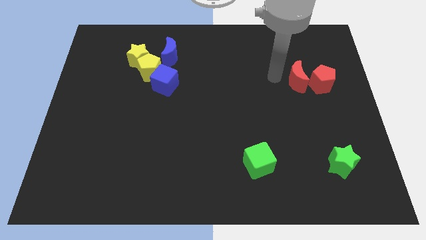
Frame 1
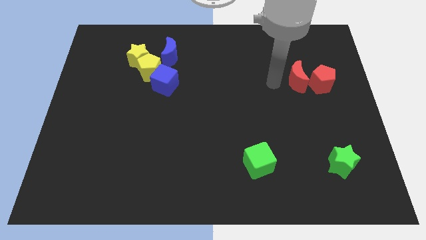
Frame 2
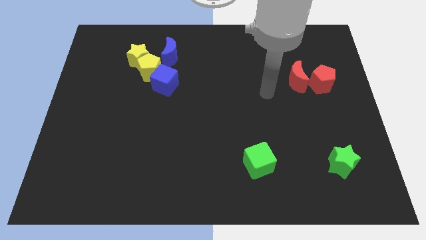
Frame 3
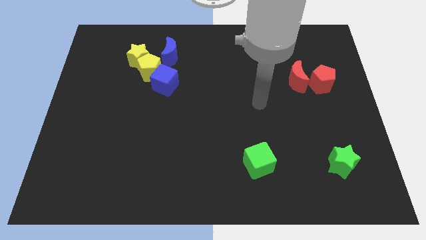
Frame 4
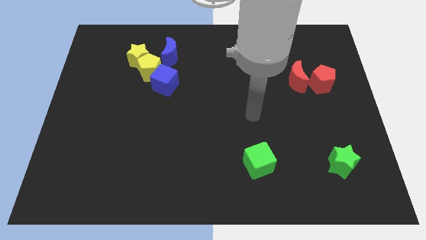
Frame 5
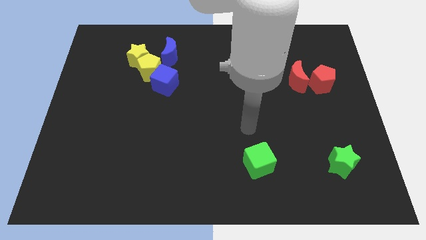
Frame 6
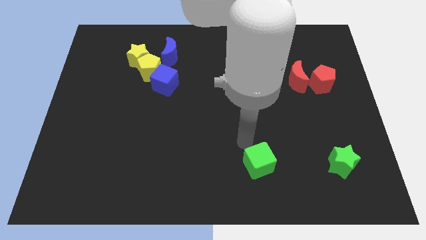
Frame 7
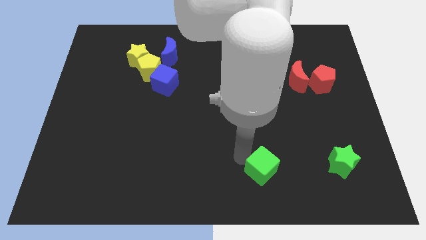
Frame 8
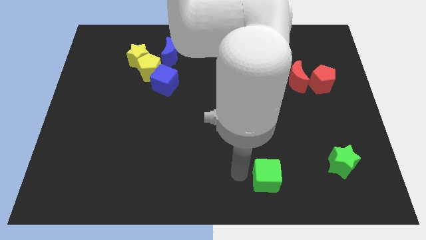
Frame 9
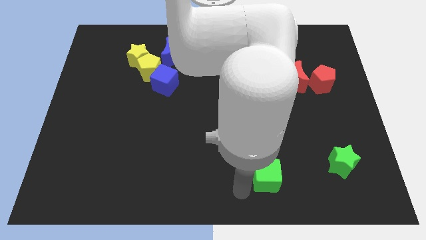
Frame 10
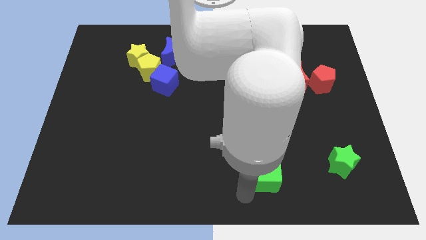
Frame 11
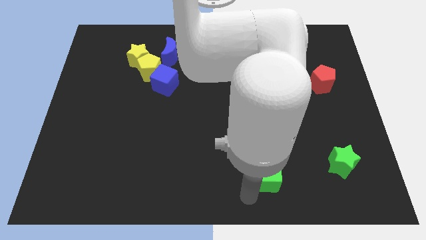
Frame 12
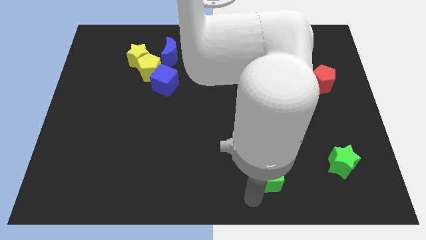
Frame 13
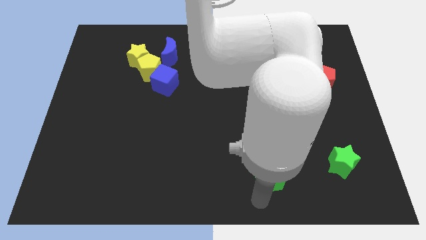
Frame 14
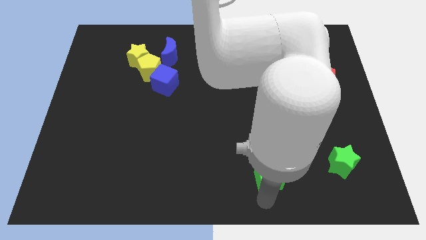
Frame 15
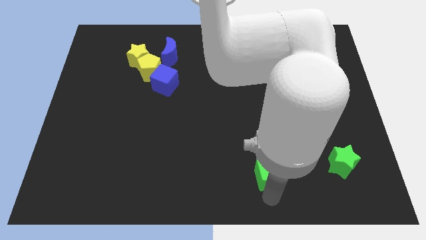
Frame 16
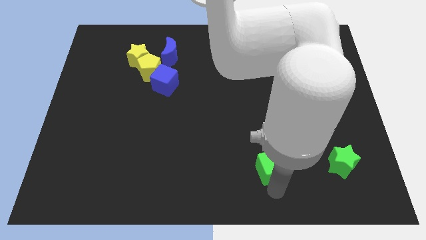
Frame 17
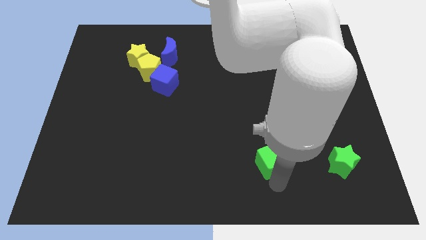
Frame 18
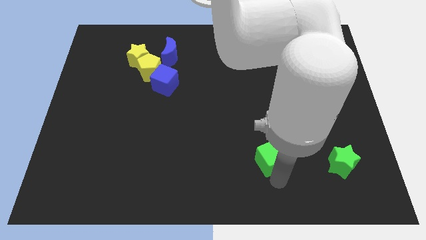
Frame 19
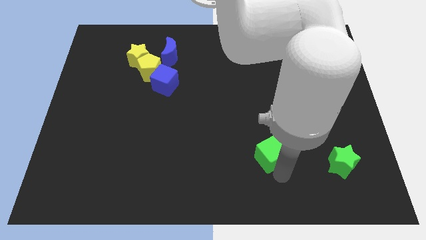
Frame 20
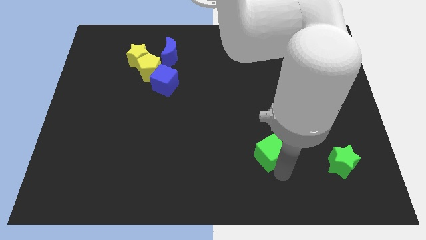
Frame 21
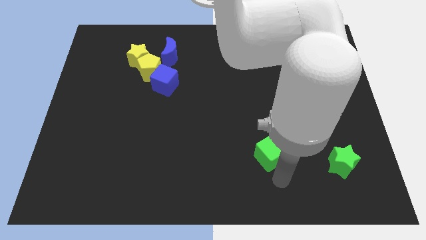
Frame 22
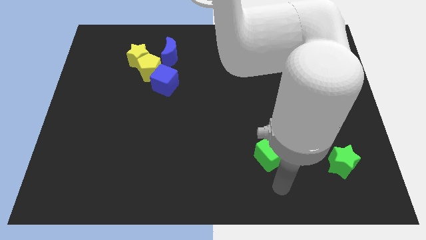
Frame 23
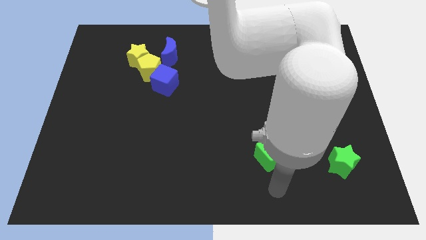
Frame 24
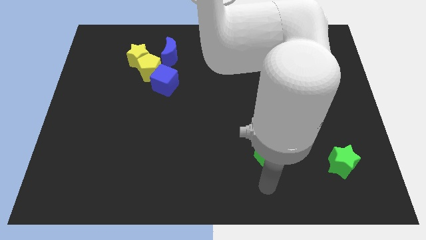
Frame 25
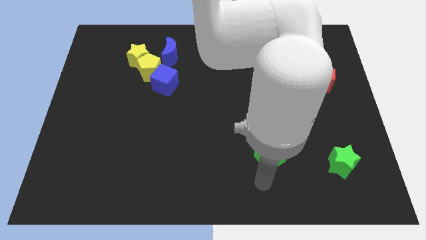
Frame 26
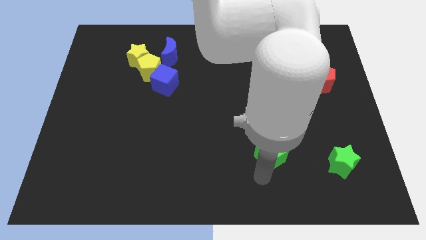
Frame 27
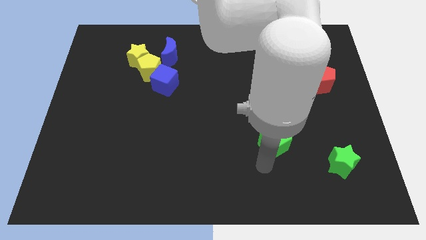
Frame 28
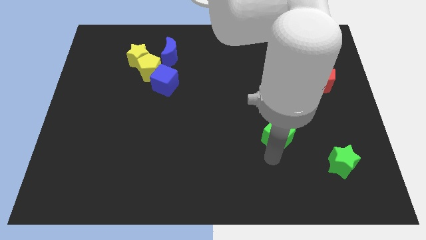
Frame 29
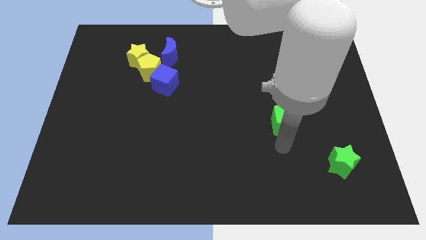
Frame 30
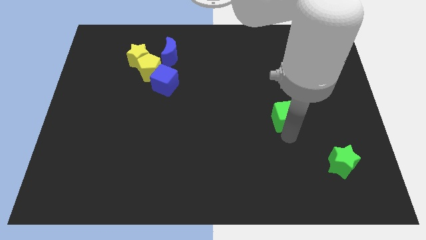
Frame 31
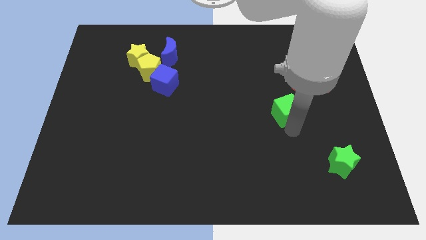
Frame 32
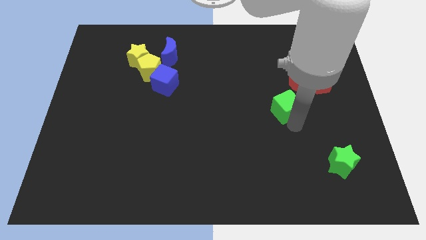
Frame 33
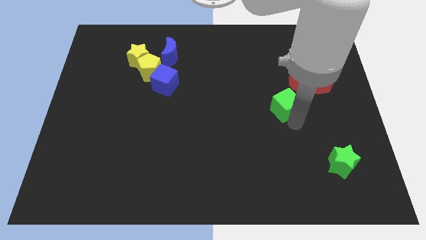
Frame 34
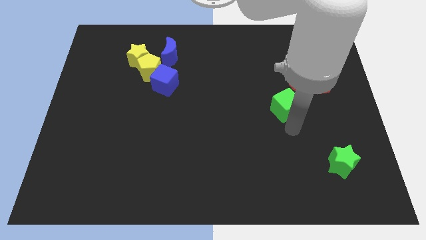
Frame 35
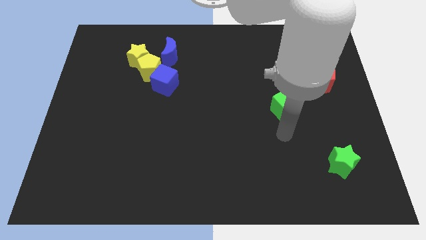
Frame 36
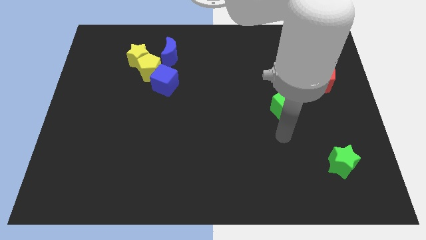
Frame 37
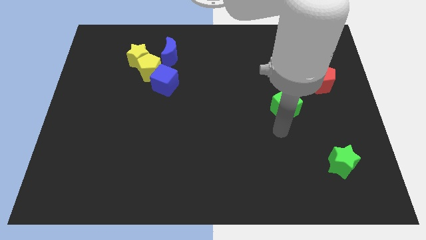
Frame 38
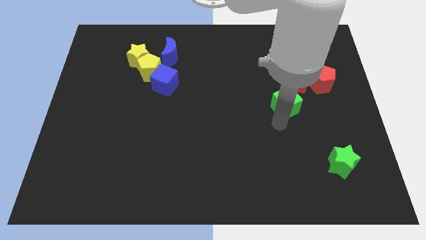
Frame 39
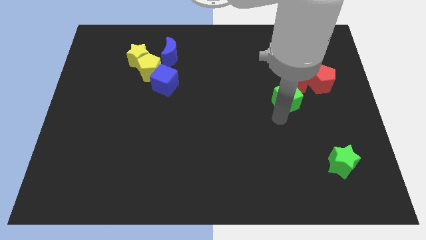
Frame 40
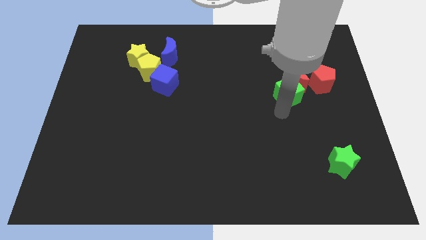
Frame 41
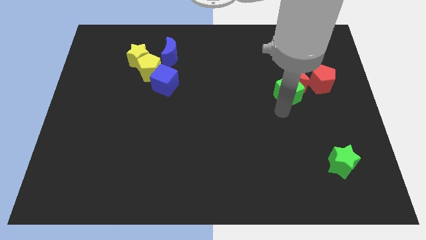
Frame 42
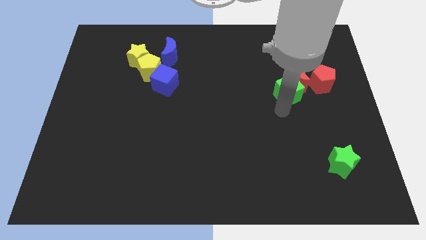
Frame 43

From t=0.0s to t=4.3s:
move the green cube into the red crescent

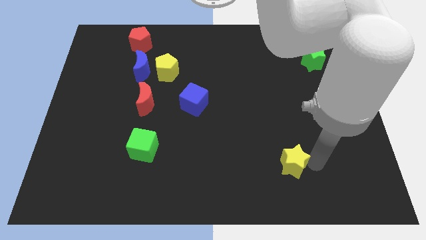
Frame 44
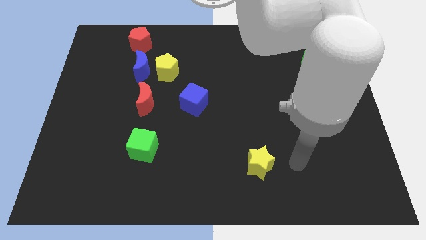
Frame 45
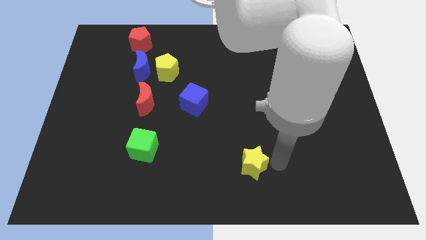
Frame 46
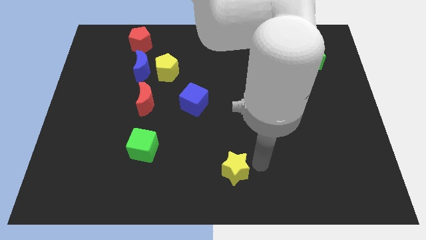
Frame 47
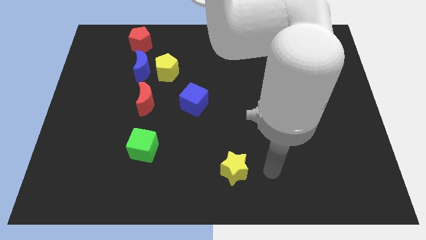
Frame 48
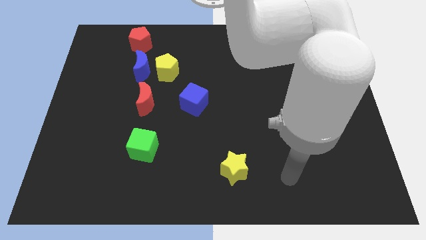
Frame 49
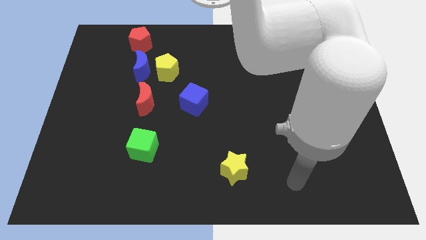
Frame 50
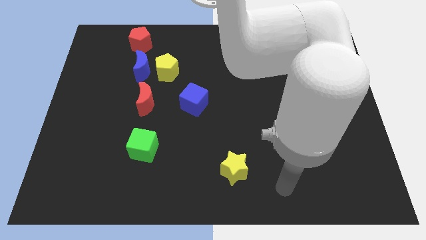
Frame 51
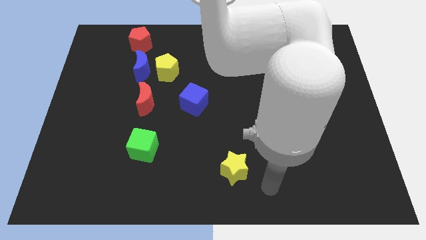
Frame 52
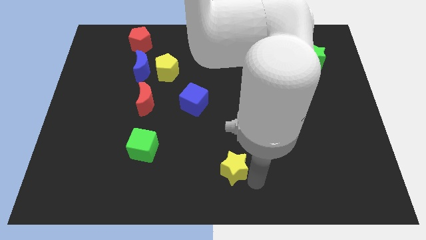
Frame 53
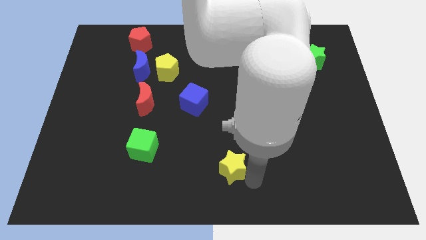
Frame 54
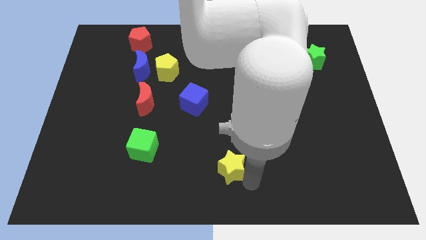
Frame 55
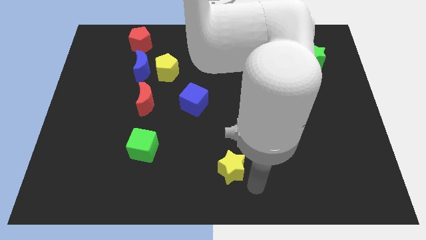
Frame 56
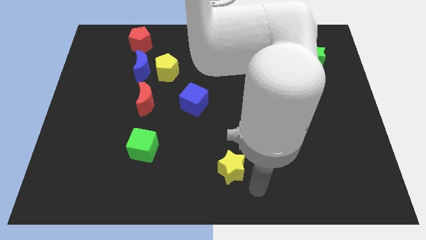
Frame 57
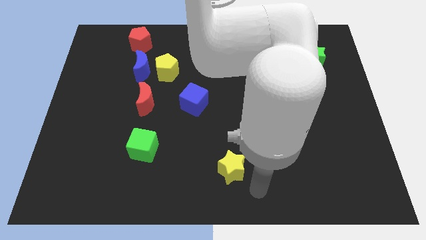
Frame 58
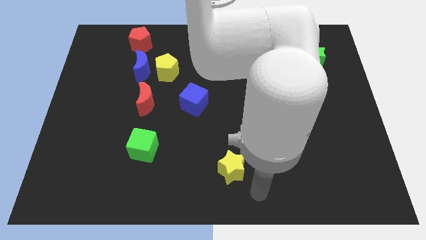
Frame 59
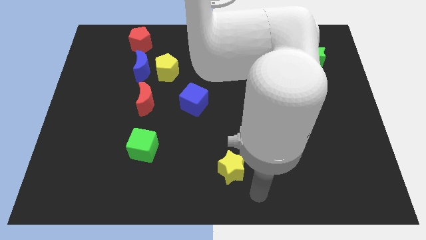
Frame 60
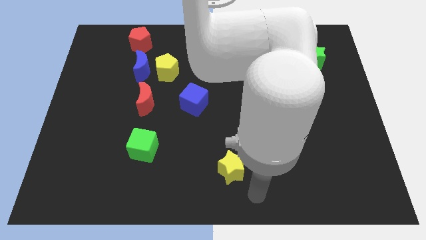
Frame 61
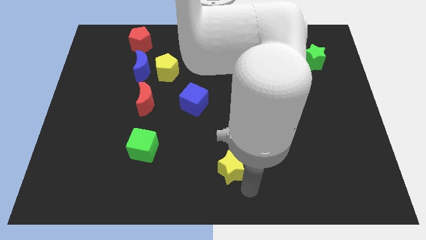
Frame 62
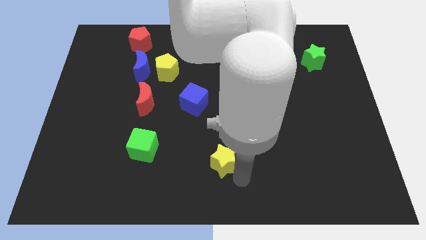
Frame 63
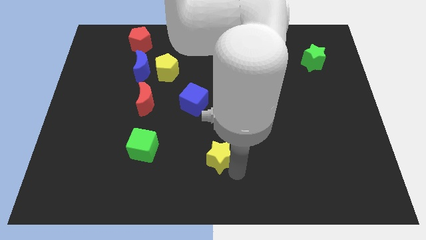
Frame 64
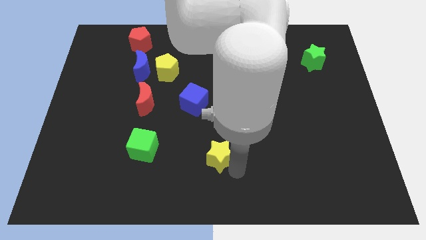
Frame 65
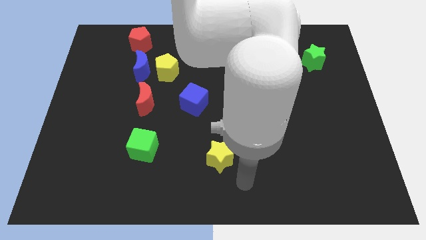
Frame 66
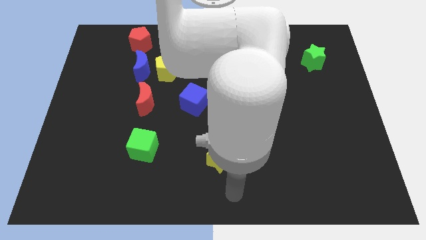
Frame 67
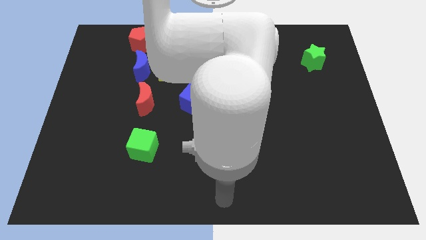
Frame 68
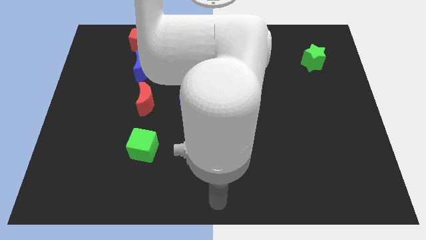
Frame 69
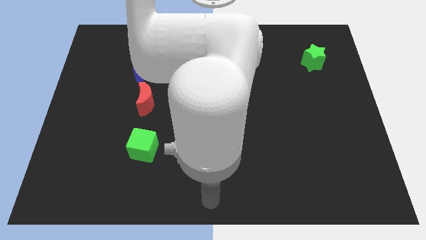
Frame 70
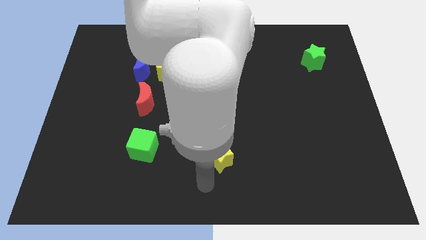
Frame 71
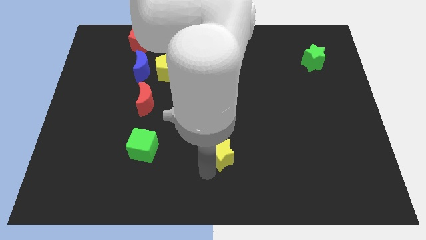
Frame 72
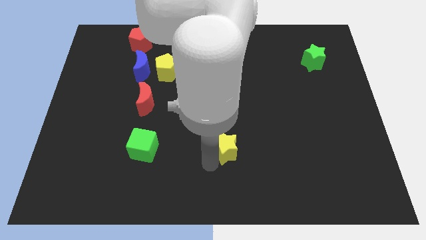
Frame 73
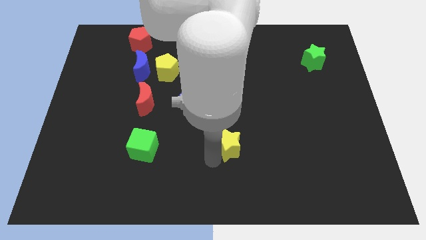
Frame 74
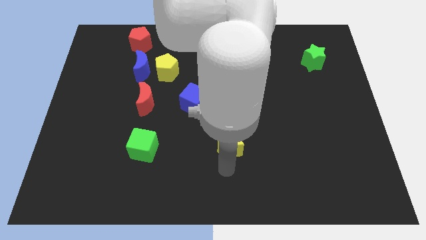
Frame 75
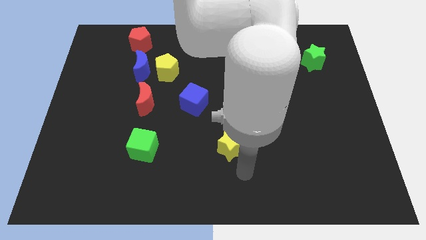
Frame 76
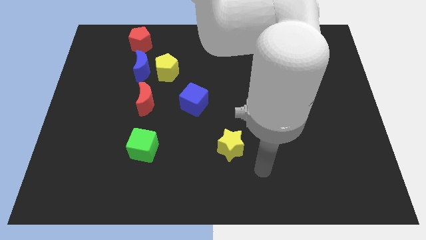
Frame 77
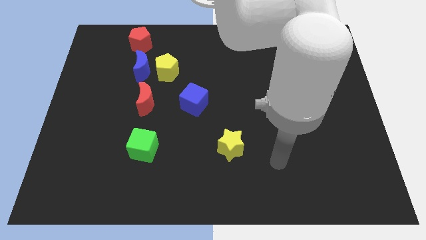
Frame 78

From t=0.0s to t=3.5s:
push the yellow star to the right of the green cube

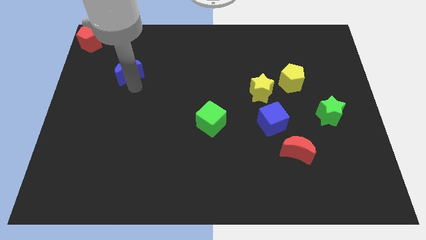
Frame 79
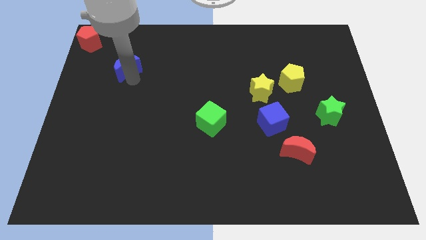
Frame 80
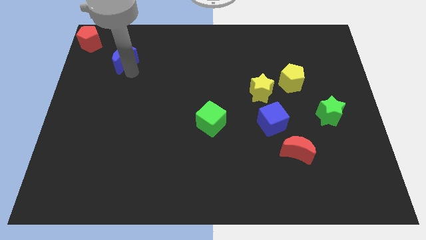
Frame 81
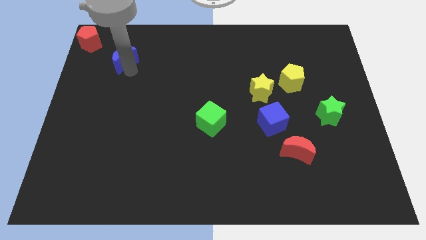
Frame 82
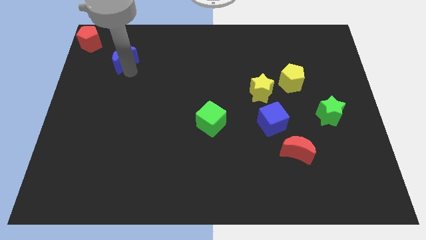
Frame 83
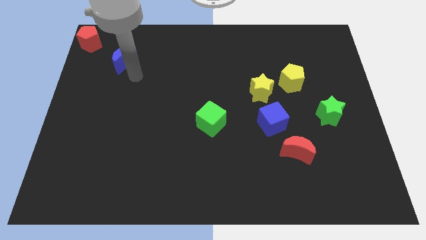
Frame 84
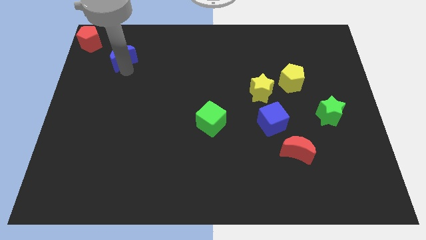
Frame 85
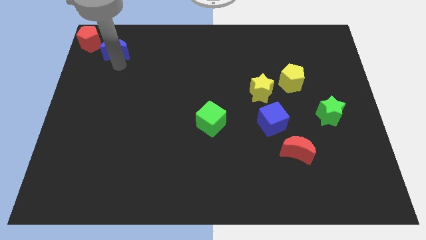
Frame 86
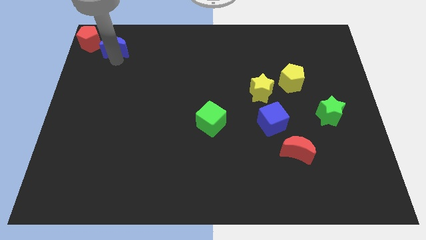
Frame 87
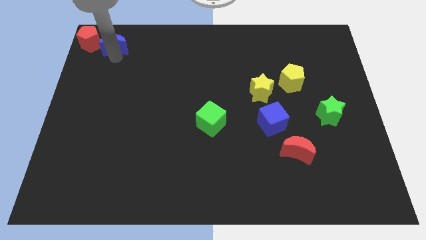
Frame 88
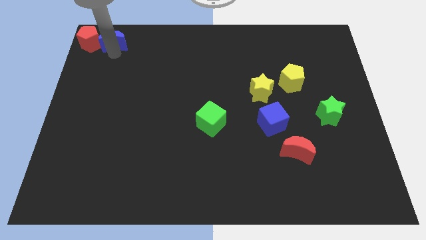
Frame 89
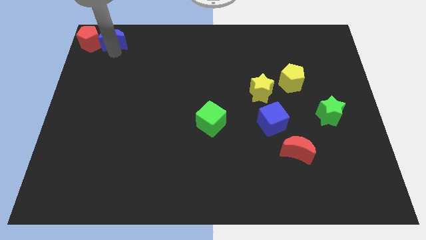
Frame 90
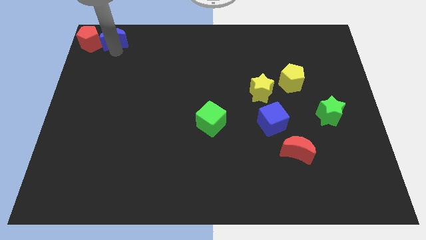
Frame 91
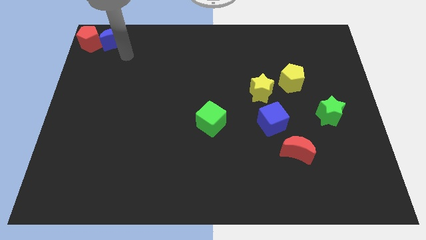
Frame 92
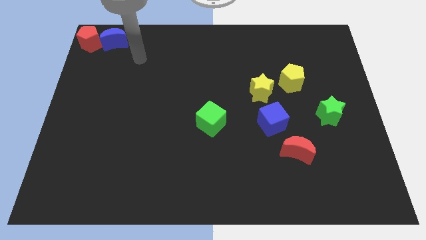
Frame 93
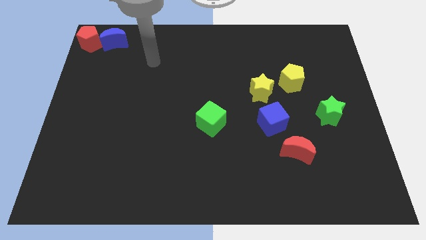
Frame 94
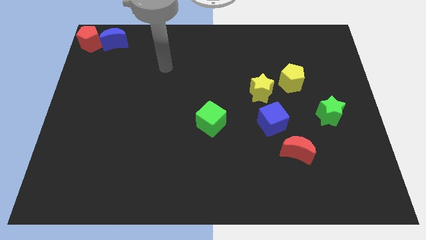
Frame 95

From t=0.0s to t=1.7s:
push the blue crescent beside the red pentagon
